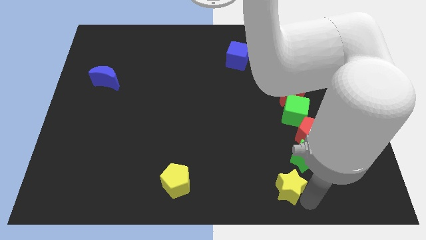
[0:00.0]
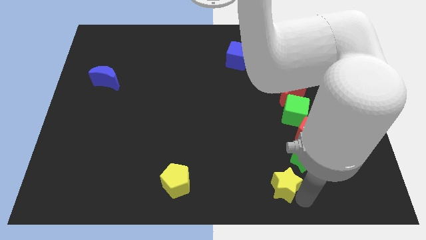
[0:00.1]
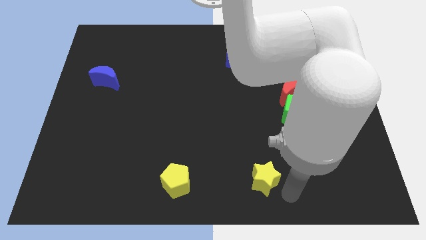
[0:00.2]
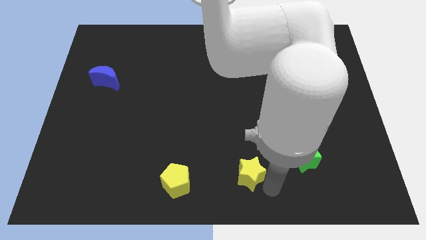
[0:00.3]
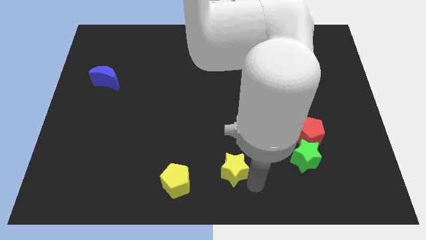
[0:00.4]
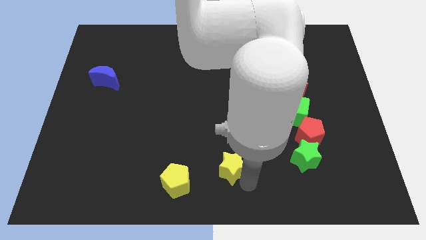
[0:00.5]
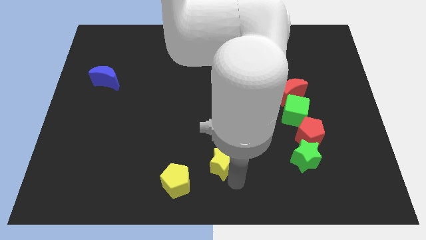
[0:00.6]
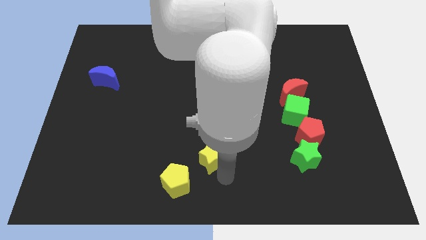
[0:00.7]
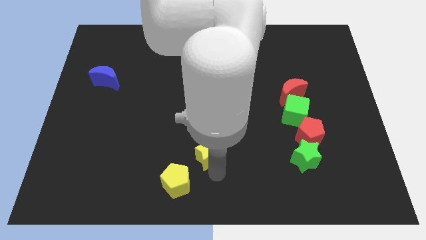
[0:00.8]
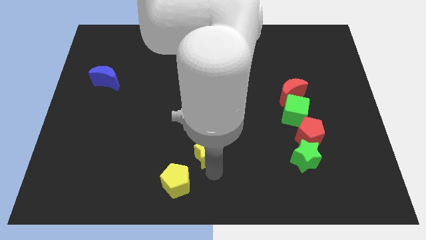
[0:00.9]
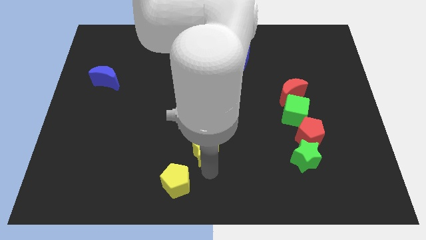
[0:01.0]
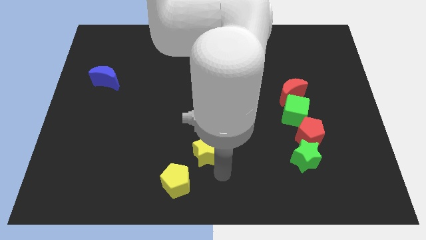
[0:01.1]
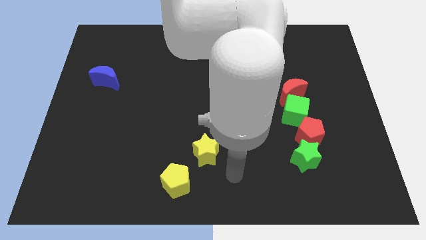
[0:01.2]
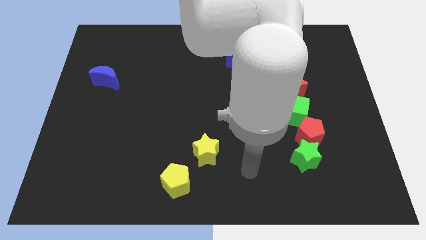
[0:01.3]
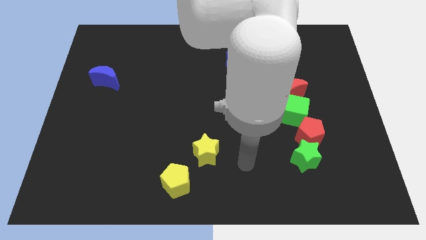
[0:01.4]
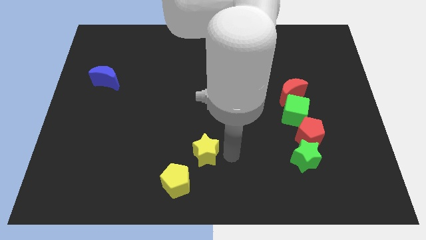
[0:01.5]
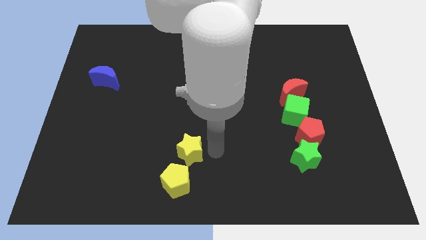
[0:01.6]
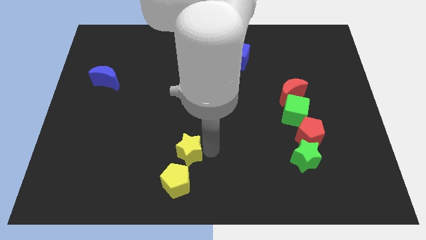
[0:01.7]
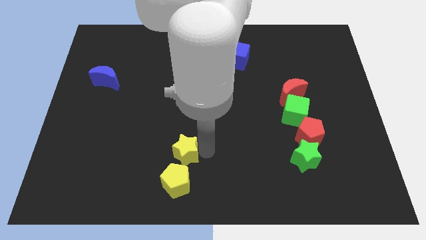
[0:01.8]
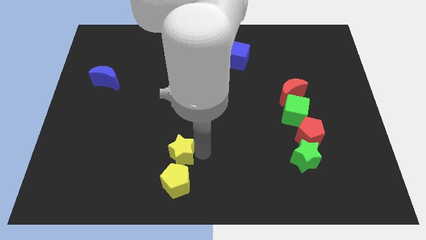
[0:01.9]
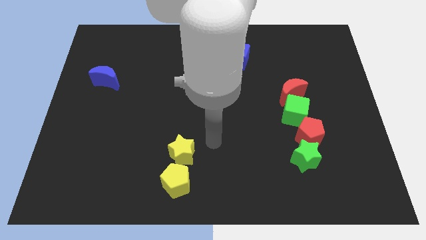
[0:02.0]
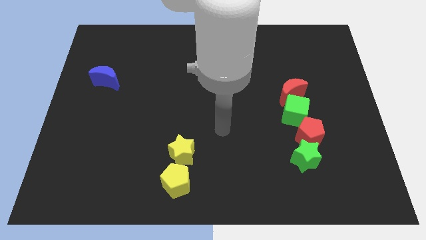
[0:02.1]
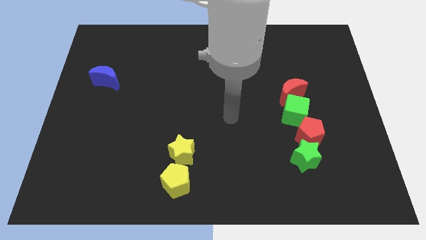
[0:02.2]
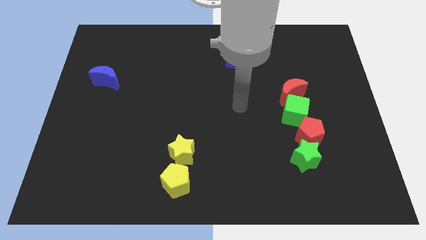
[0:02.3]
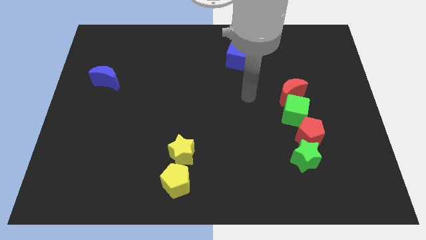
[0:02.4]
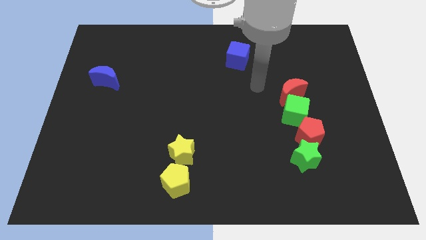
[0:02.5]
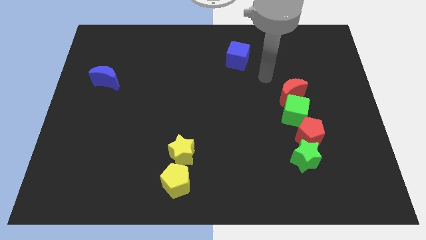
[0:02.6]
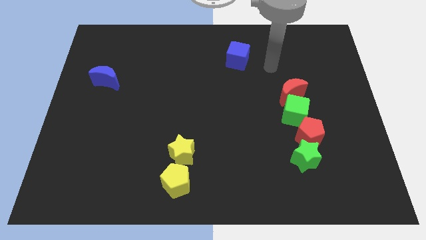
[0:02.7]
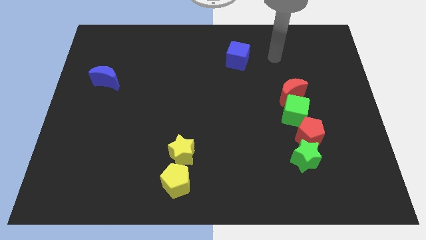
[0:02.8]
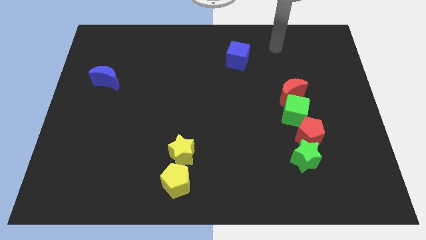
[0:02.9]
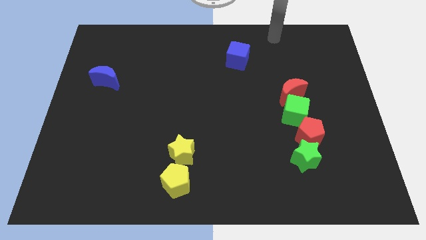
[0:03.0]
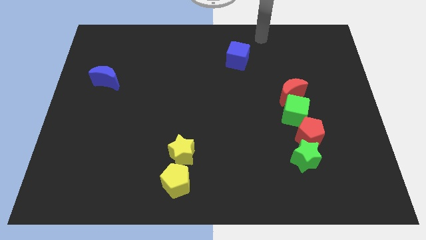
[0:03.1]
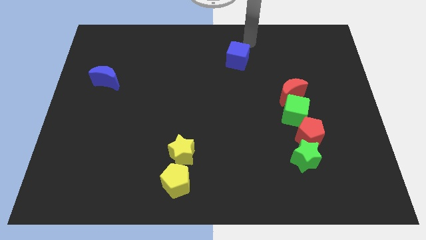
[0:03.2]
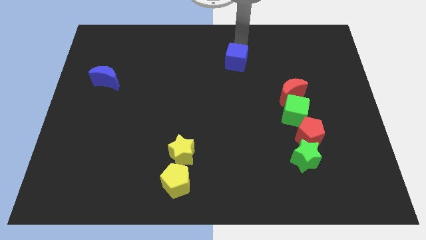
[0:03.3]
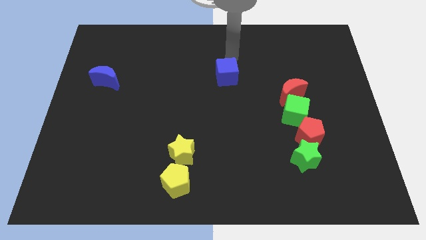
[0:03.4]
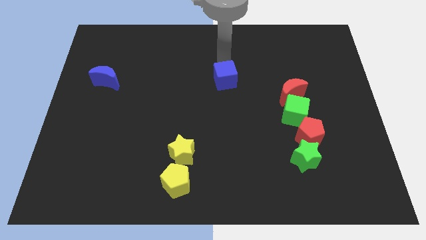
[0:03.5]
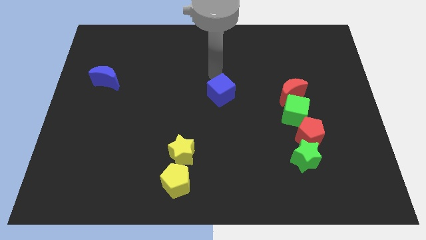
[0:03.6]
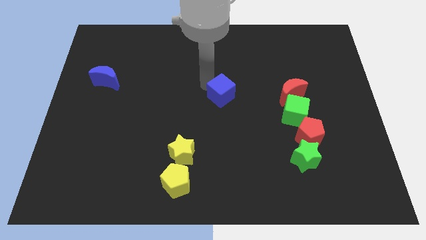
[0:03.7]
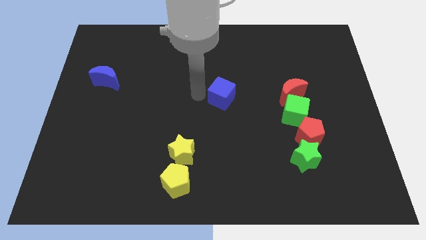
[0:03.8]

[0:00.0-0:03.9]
move blue cube to the center

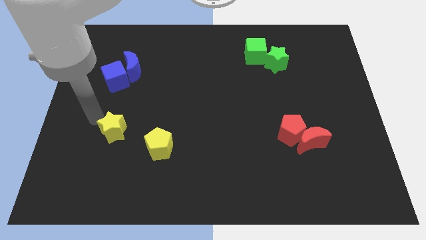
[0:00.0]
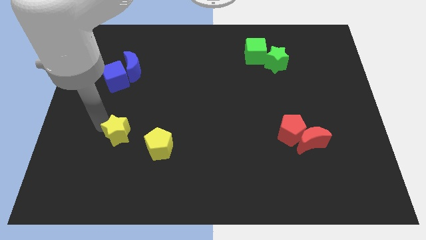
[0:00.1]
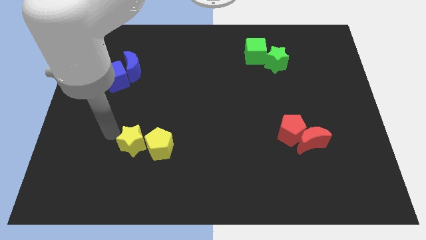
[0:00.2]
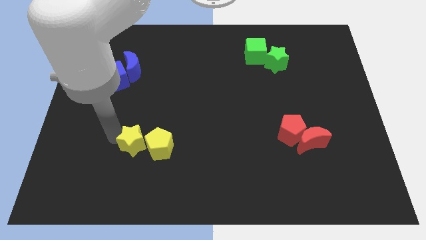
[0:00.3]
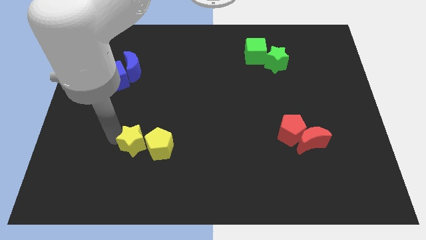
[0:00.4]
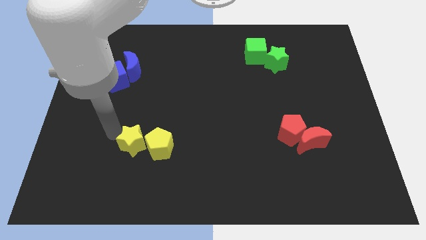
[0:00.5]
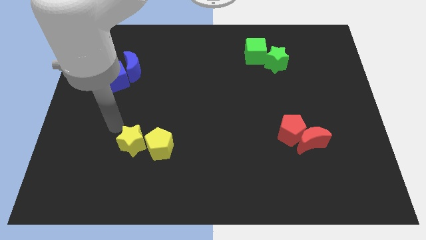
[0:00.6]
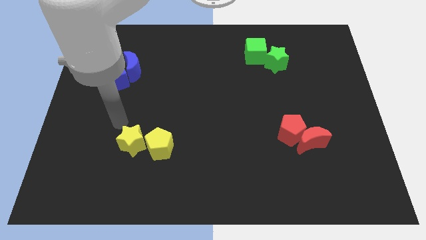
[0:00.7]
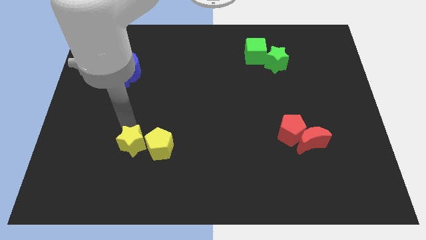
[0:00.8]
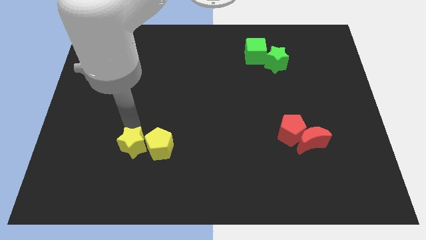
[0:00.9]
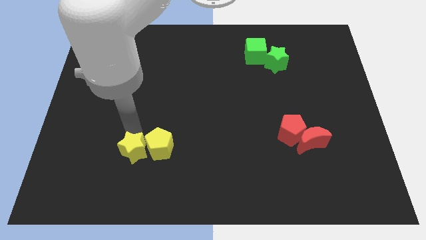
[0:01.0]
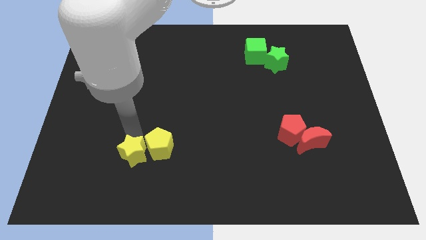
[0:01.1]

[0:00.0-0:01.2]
put yellow star adjacent to yellow pentagon

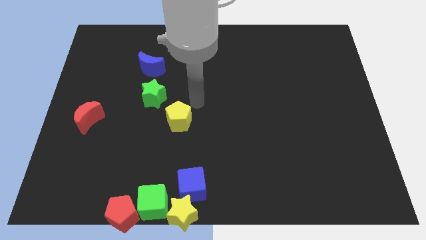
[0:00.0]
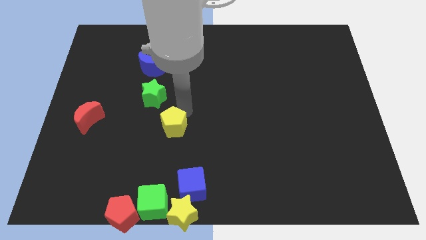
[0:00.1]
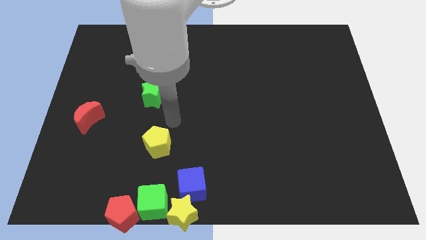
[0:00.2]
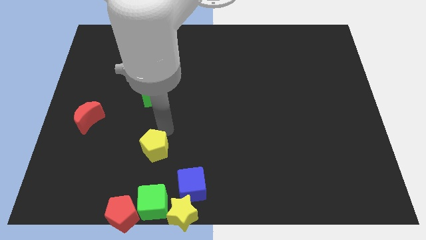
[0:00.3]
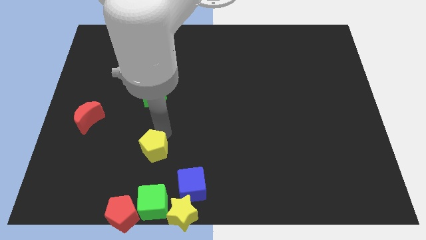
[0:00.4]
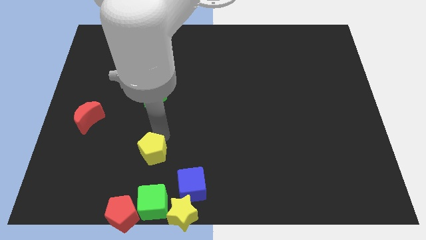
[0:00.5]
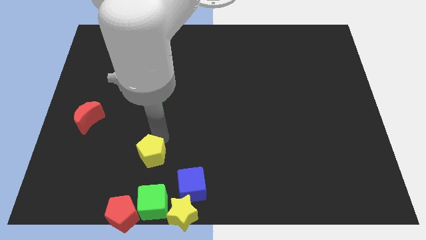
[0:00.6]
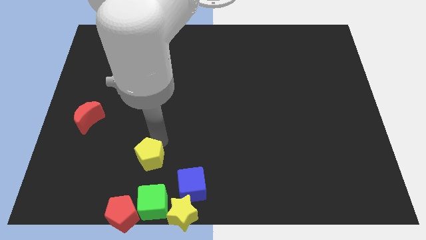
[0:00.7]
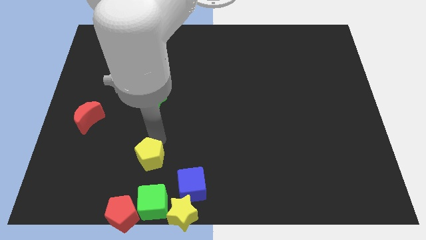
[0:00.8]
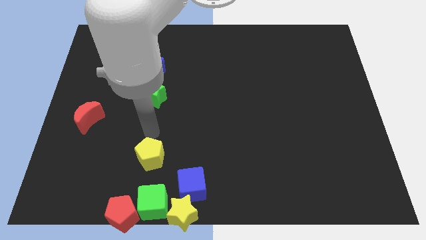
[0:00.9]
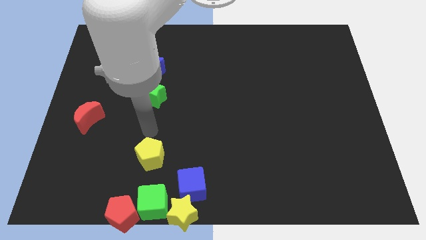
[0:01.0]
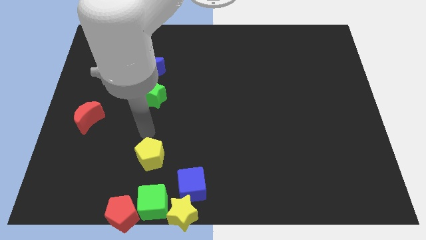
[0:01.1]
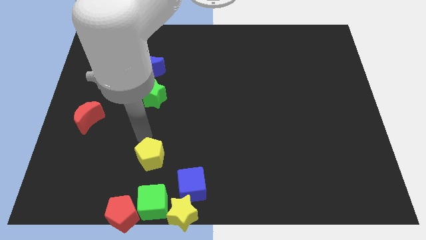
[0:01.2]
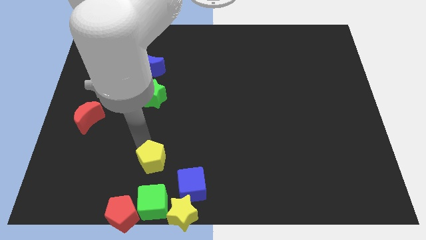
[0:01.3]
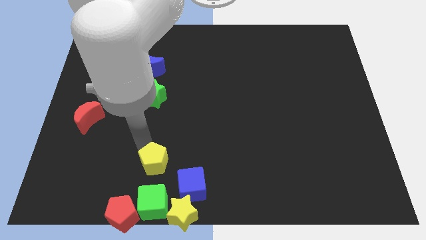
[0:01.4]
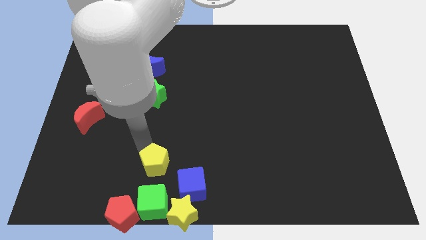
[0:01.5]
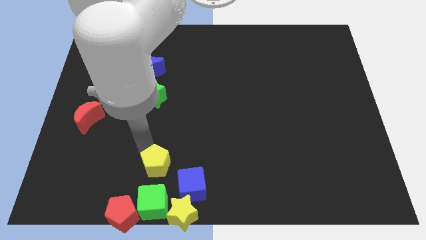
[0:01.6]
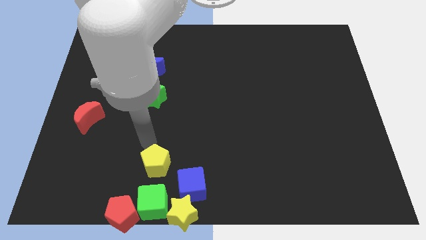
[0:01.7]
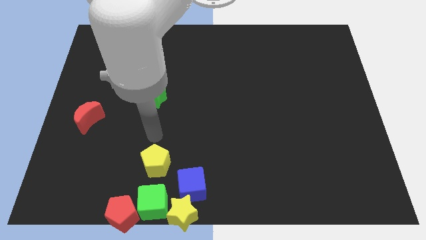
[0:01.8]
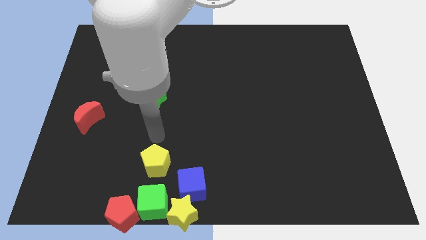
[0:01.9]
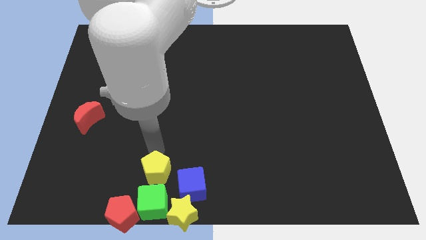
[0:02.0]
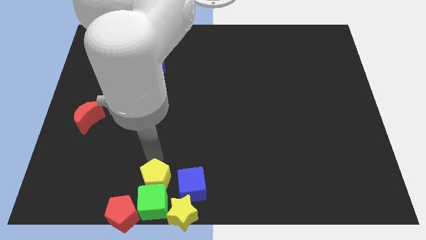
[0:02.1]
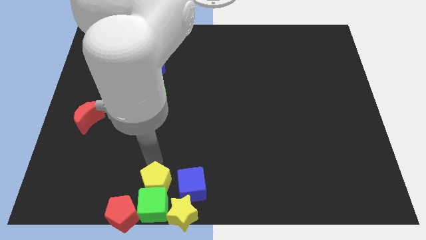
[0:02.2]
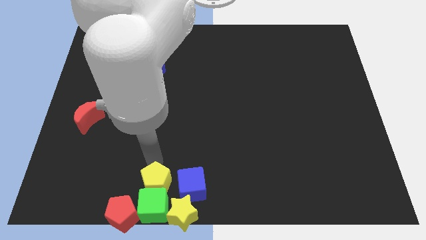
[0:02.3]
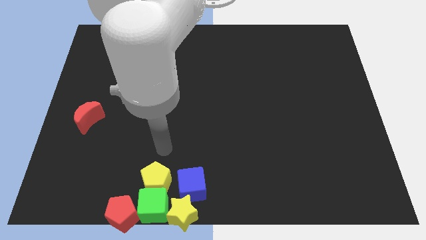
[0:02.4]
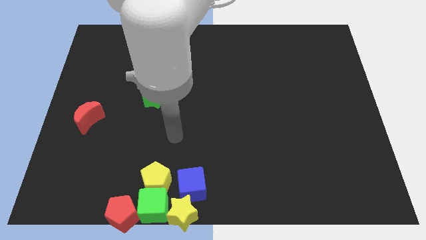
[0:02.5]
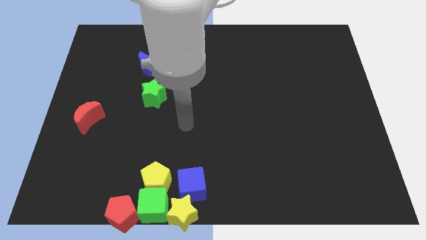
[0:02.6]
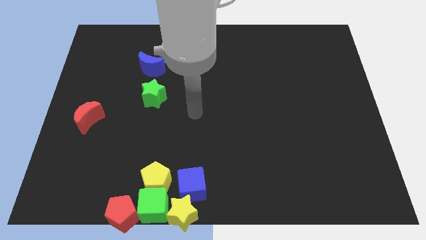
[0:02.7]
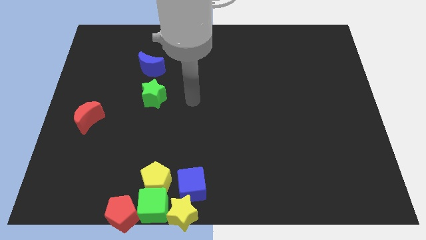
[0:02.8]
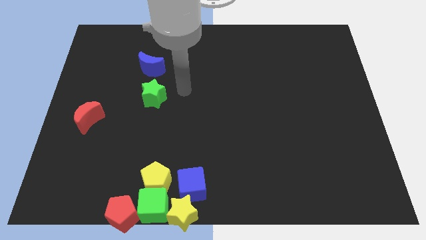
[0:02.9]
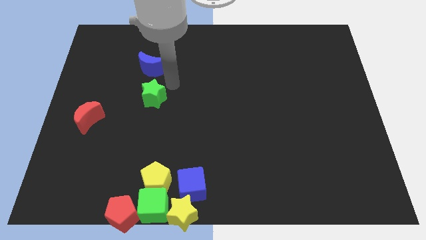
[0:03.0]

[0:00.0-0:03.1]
push the yellow pentagon to the top side of the green cube

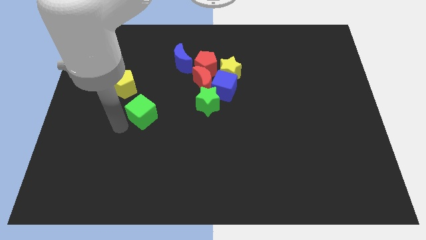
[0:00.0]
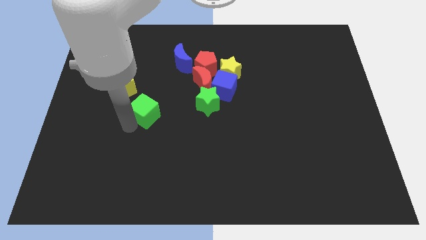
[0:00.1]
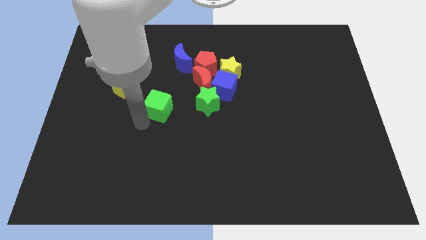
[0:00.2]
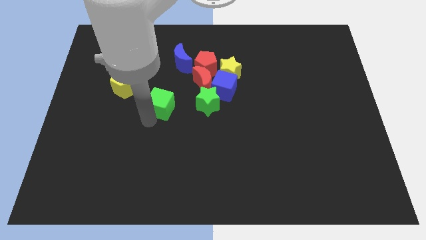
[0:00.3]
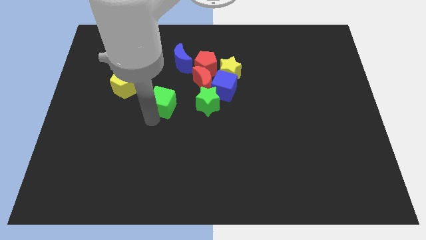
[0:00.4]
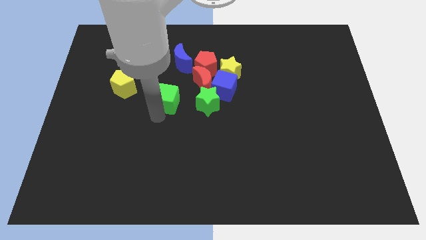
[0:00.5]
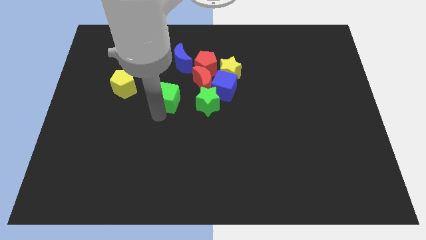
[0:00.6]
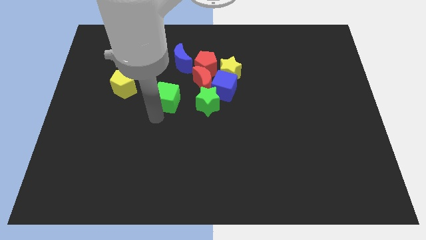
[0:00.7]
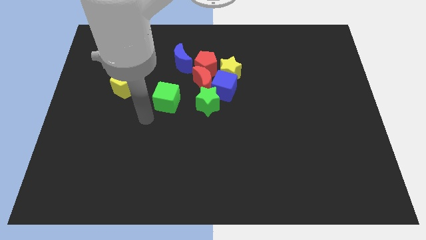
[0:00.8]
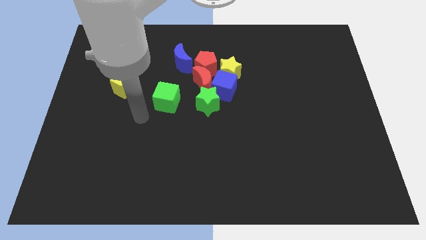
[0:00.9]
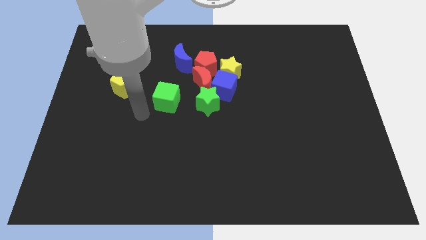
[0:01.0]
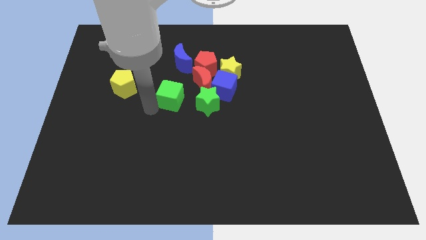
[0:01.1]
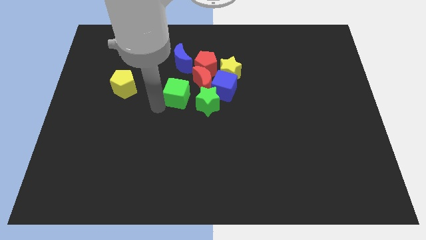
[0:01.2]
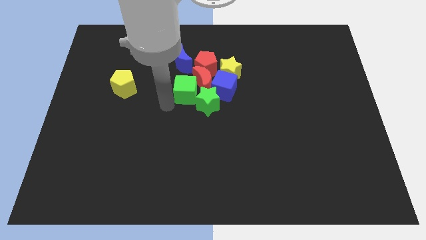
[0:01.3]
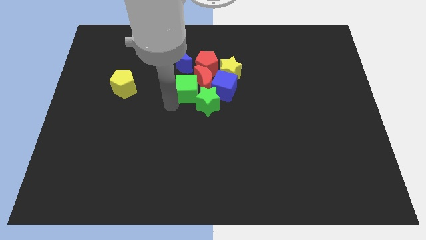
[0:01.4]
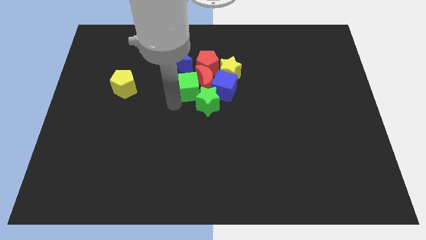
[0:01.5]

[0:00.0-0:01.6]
push the green cube to the group of blocks
